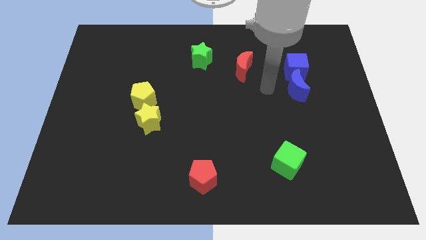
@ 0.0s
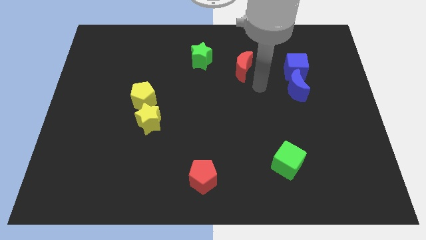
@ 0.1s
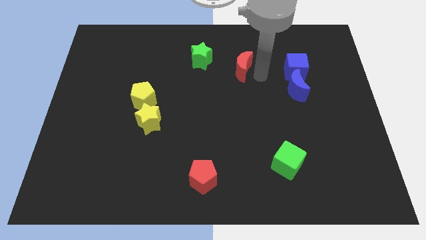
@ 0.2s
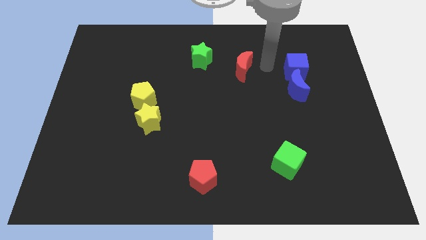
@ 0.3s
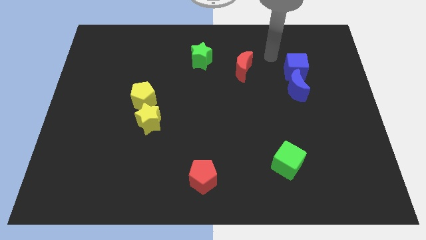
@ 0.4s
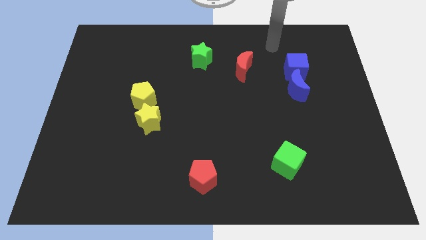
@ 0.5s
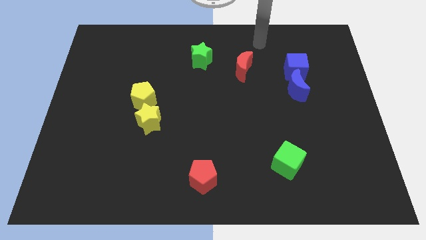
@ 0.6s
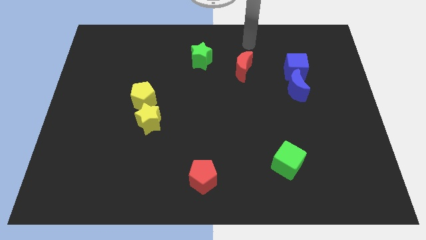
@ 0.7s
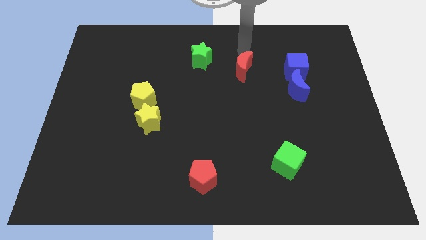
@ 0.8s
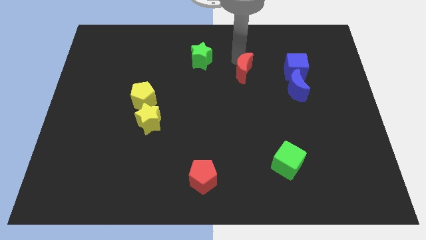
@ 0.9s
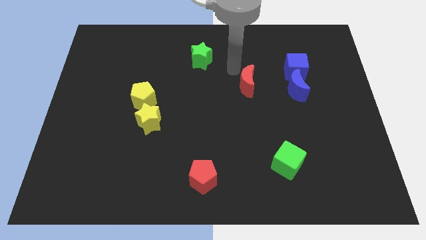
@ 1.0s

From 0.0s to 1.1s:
push red moon parallel to the left of blue moon

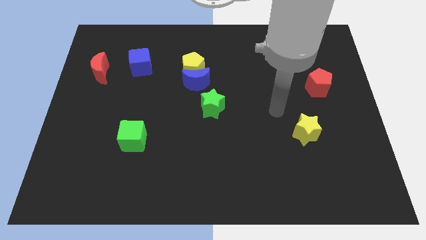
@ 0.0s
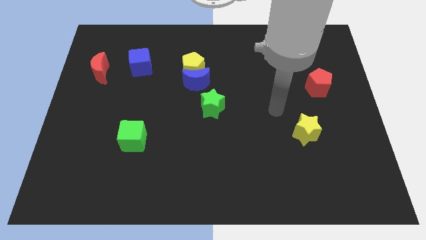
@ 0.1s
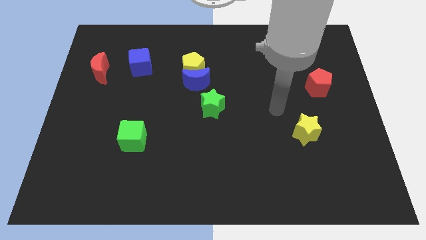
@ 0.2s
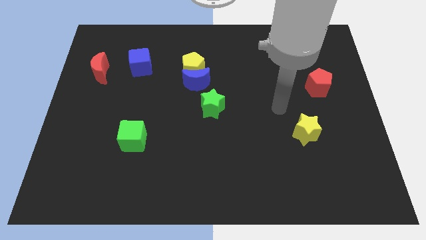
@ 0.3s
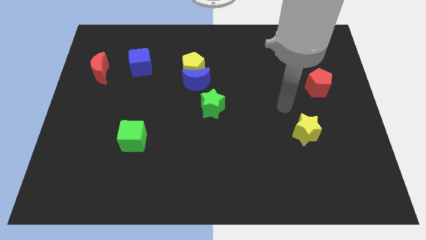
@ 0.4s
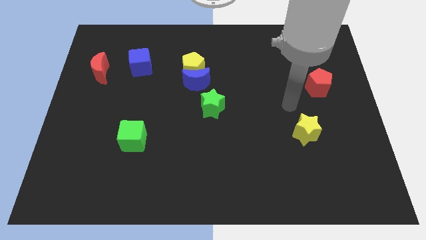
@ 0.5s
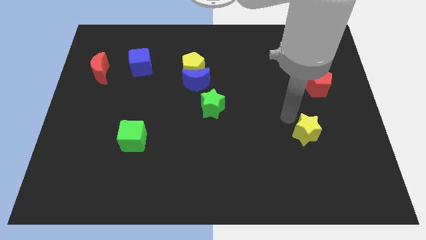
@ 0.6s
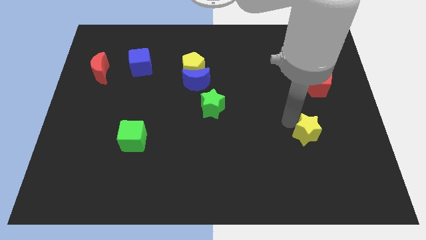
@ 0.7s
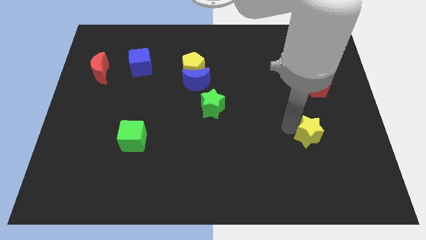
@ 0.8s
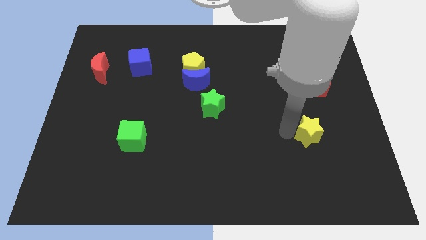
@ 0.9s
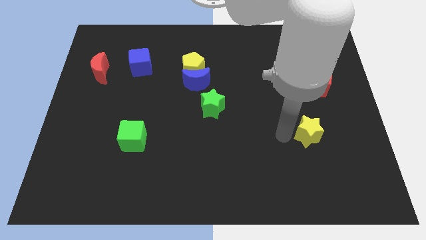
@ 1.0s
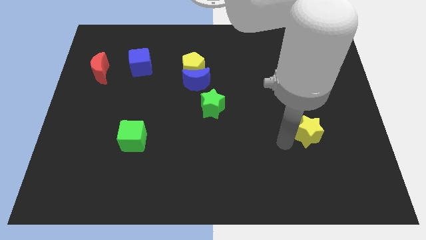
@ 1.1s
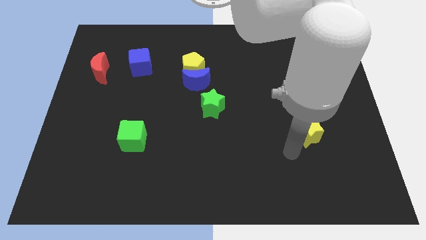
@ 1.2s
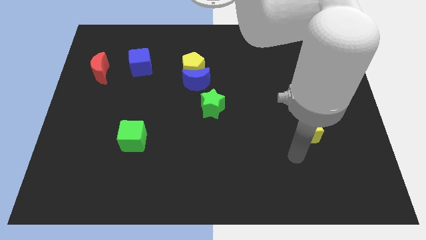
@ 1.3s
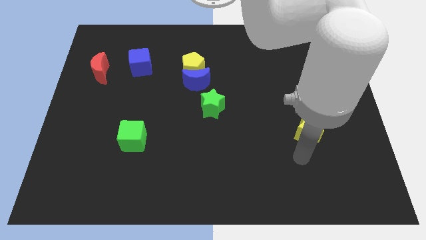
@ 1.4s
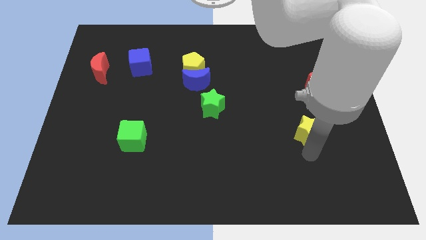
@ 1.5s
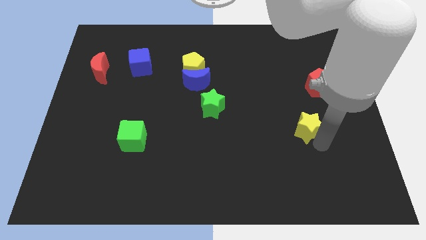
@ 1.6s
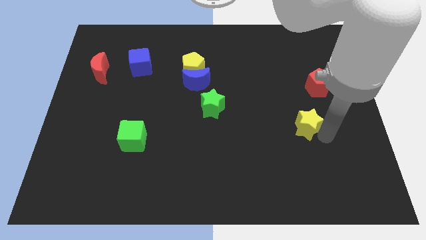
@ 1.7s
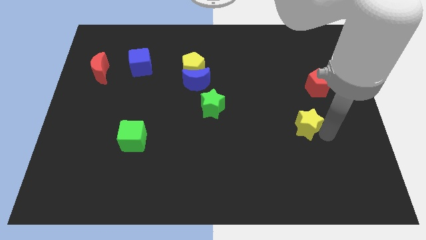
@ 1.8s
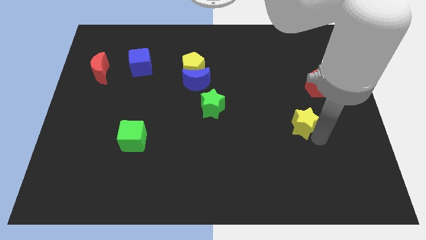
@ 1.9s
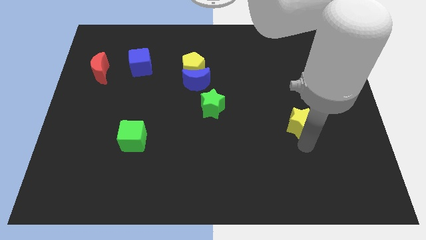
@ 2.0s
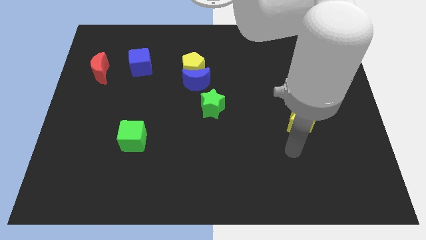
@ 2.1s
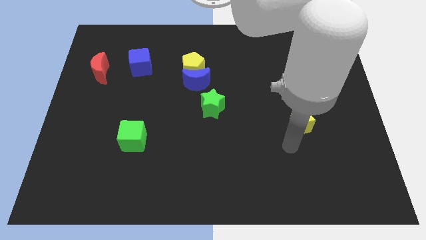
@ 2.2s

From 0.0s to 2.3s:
slightly move the yellow star towards up

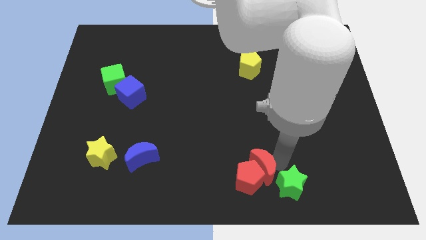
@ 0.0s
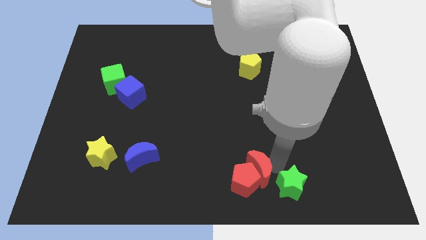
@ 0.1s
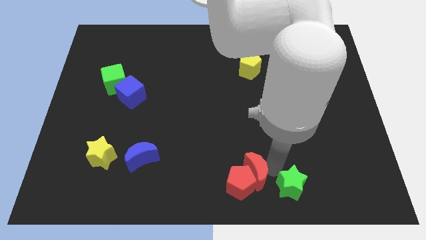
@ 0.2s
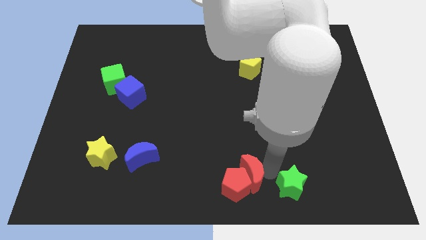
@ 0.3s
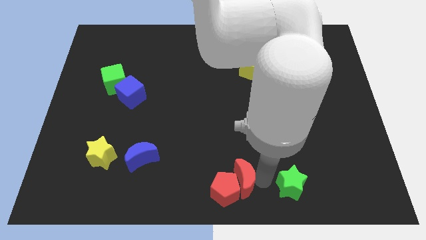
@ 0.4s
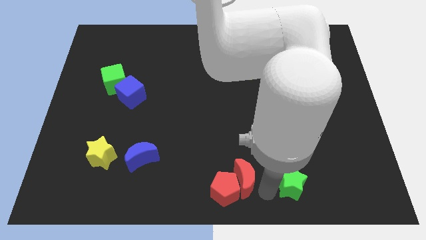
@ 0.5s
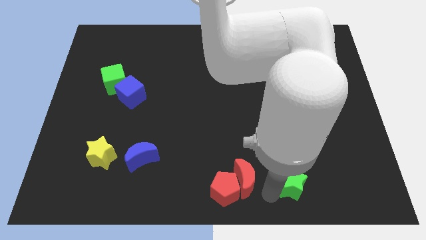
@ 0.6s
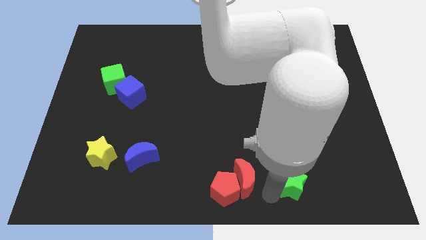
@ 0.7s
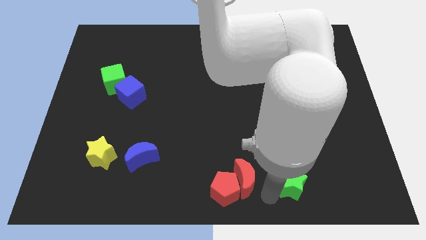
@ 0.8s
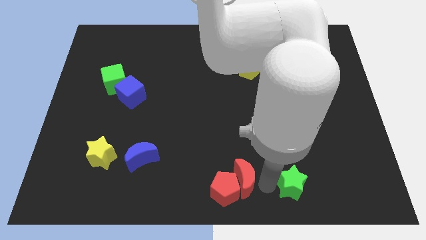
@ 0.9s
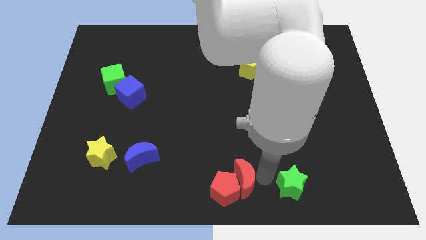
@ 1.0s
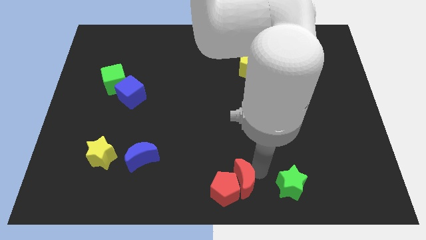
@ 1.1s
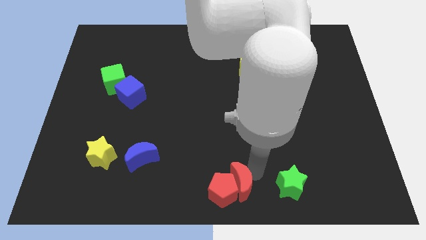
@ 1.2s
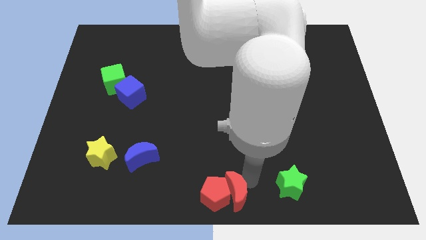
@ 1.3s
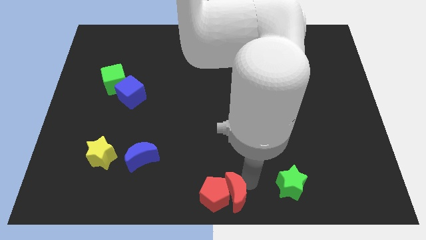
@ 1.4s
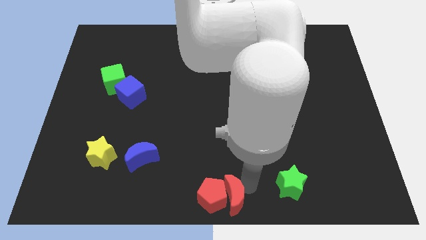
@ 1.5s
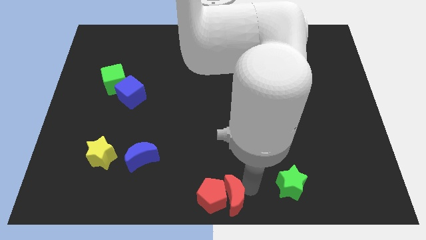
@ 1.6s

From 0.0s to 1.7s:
put the red moon and the red pentagon at the bottom center

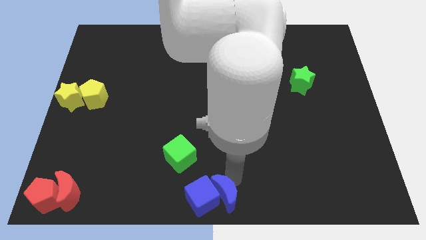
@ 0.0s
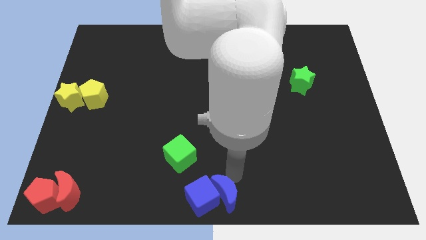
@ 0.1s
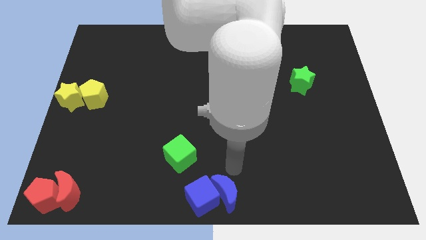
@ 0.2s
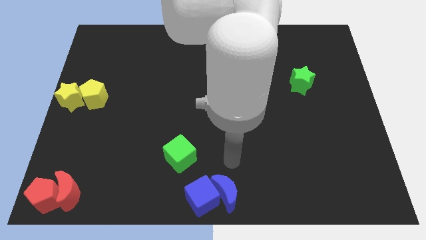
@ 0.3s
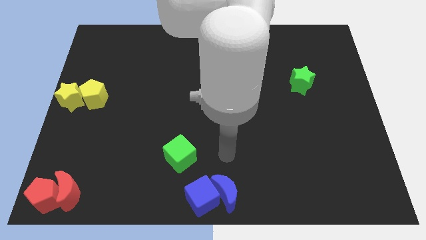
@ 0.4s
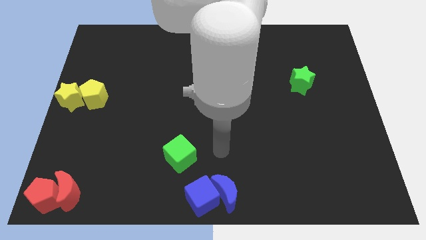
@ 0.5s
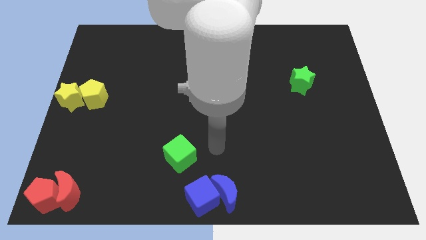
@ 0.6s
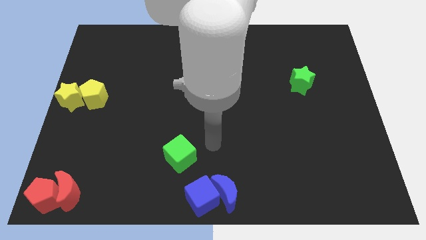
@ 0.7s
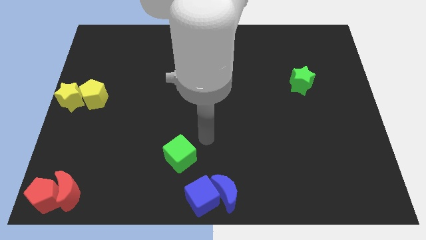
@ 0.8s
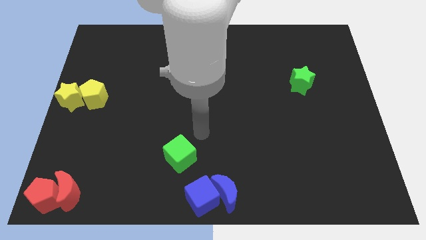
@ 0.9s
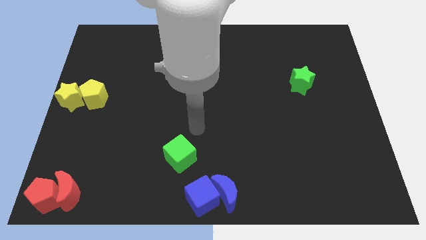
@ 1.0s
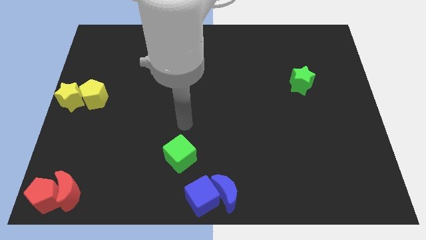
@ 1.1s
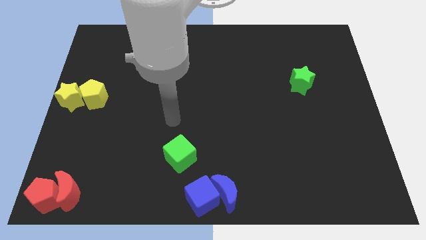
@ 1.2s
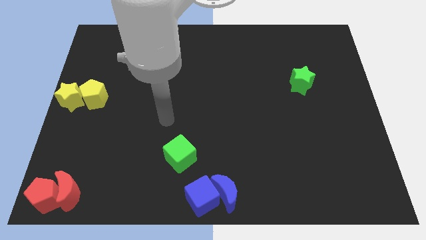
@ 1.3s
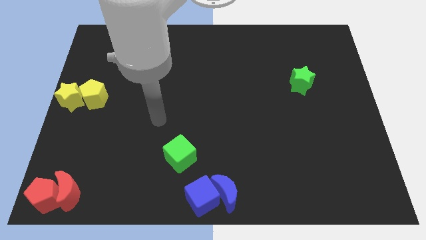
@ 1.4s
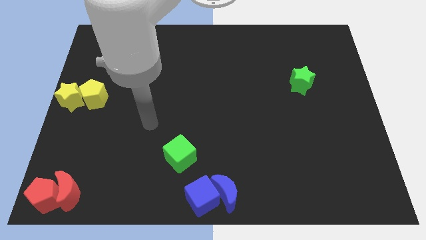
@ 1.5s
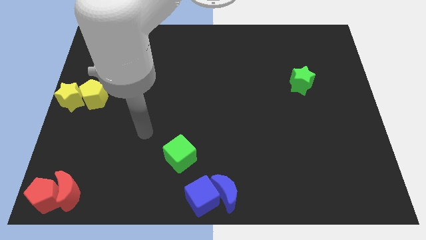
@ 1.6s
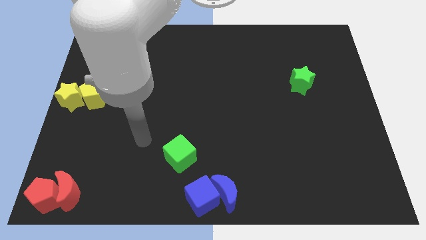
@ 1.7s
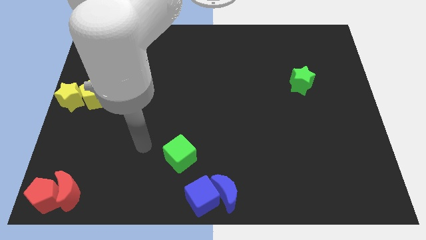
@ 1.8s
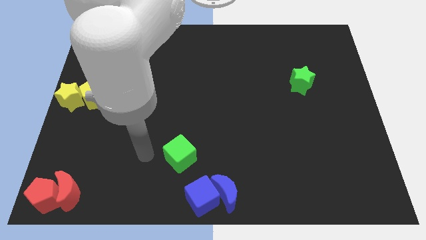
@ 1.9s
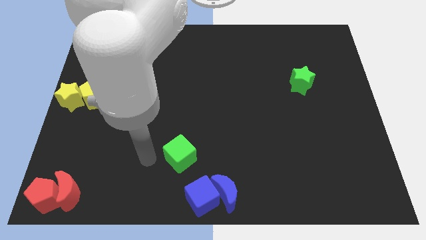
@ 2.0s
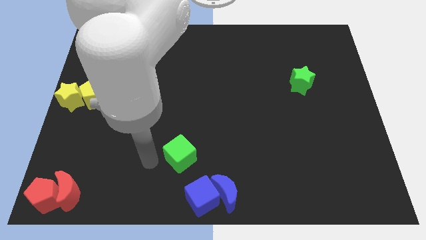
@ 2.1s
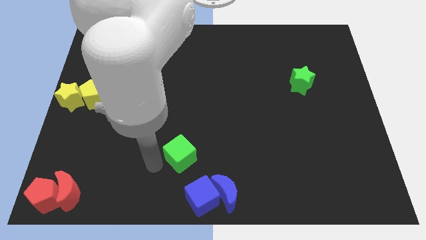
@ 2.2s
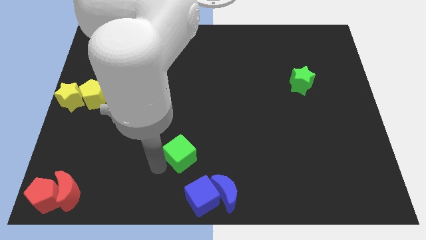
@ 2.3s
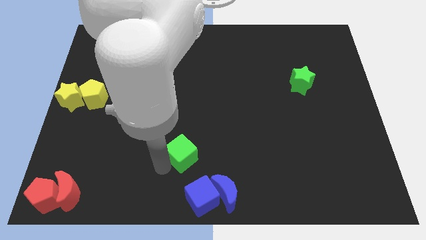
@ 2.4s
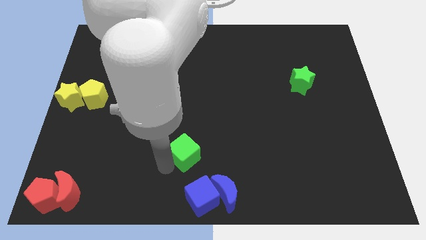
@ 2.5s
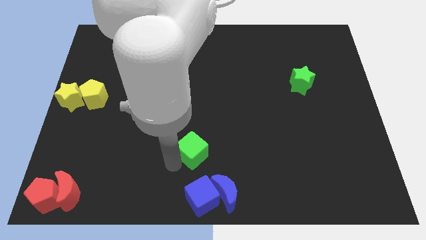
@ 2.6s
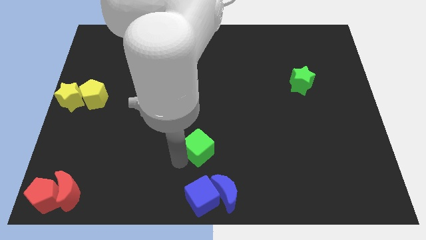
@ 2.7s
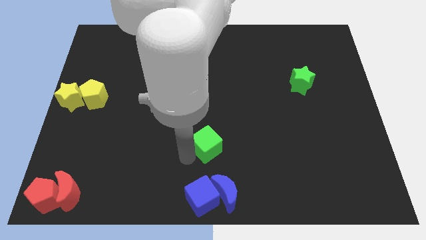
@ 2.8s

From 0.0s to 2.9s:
move the green cube to the top of the blue cube

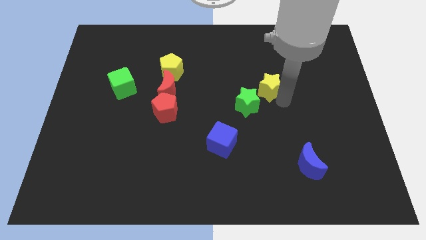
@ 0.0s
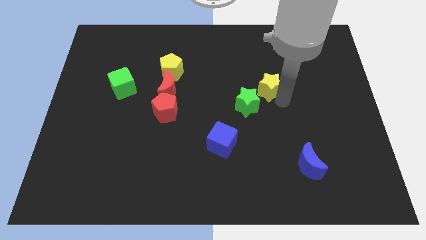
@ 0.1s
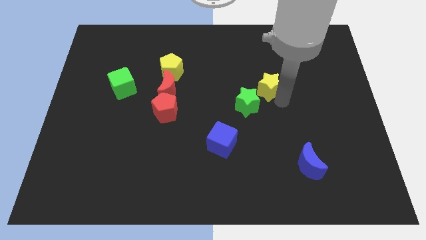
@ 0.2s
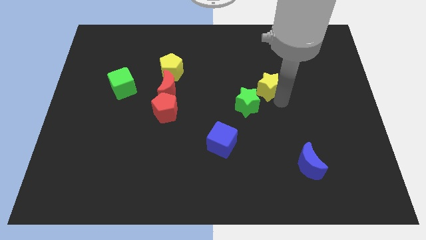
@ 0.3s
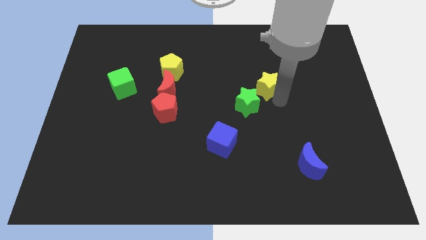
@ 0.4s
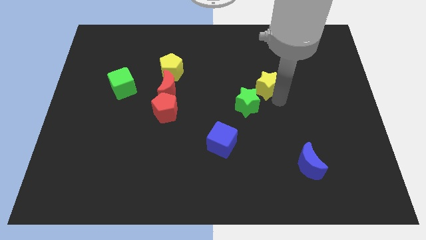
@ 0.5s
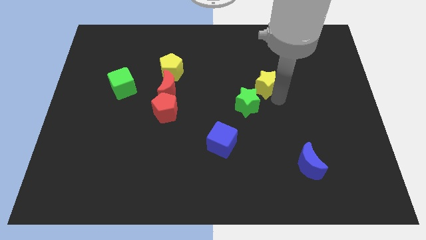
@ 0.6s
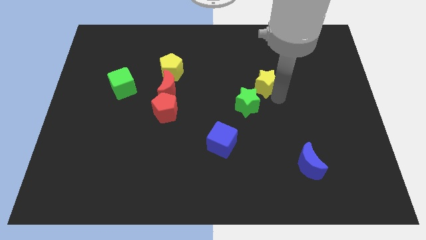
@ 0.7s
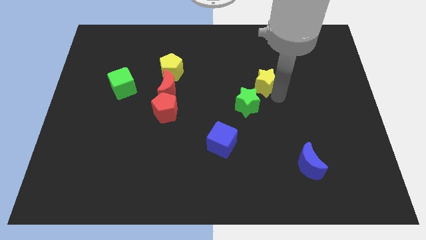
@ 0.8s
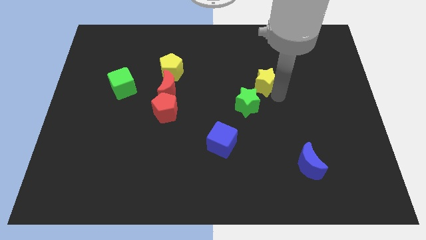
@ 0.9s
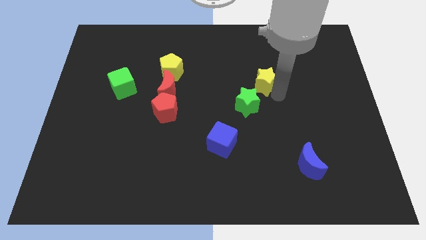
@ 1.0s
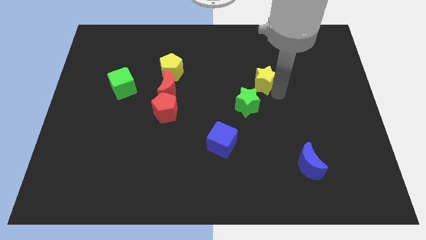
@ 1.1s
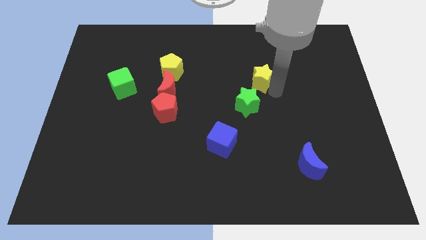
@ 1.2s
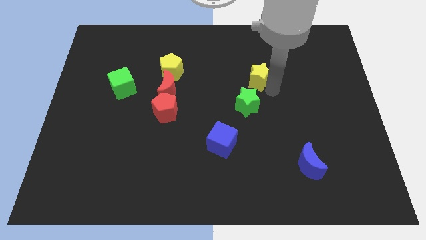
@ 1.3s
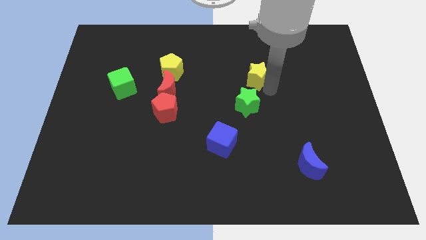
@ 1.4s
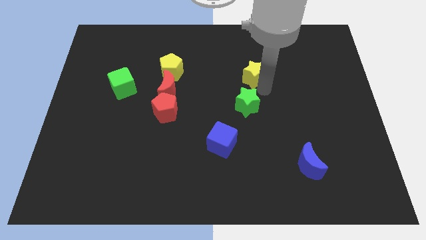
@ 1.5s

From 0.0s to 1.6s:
place the yellow star to the top of the green star
